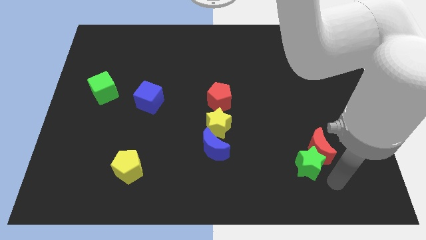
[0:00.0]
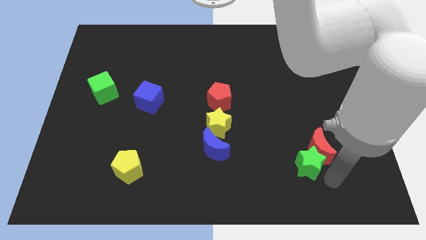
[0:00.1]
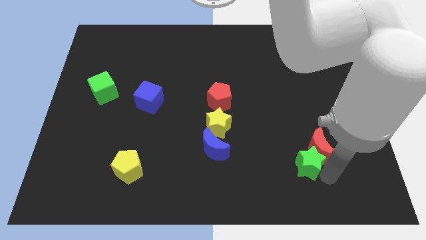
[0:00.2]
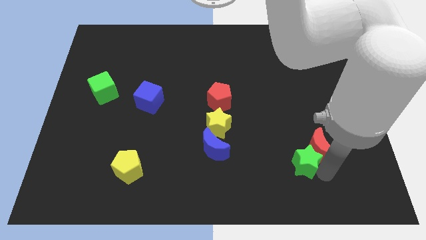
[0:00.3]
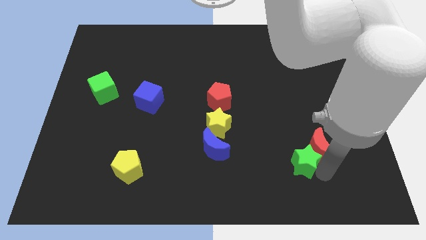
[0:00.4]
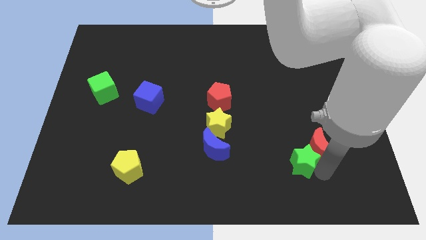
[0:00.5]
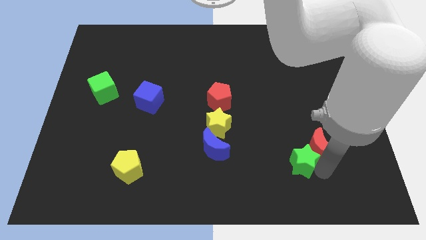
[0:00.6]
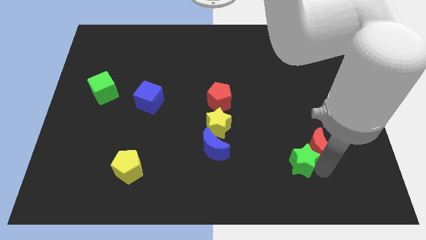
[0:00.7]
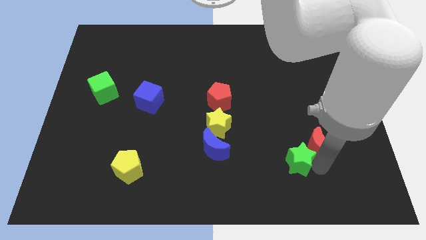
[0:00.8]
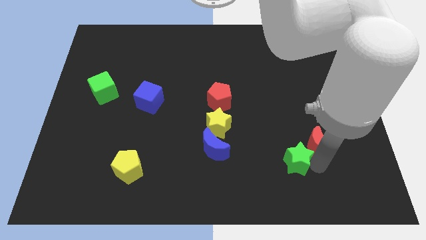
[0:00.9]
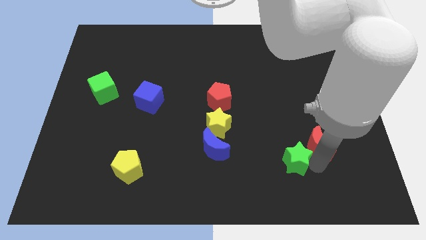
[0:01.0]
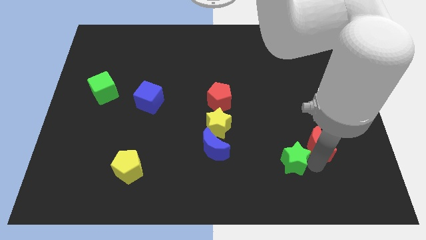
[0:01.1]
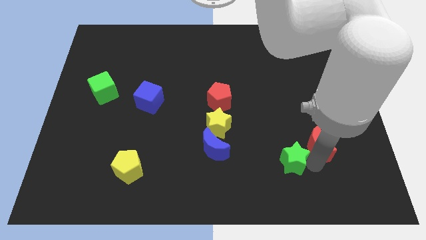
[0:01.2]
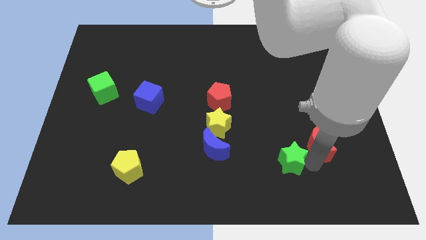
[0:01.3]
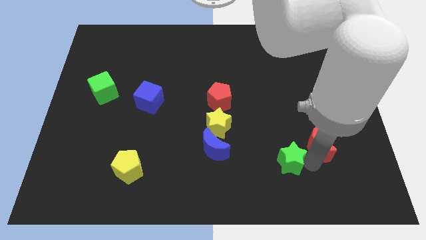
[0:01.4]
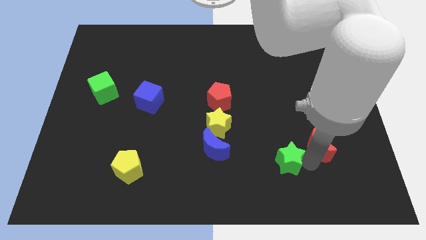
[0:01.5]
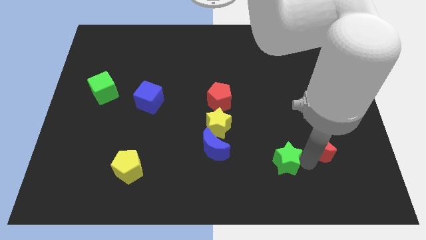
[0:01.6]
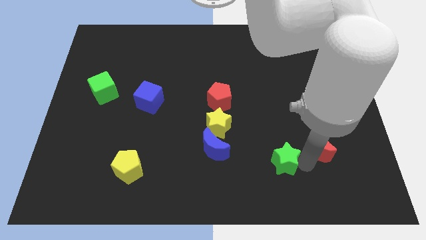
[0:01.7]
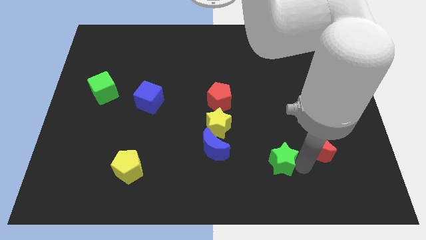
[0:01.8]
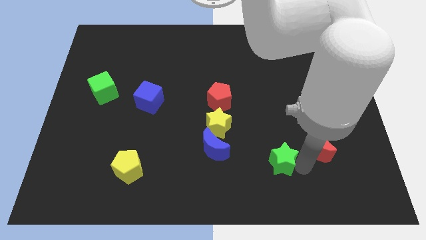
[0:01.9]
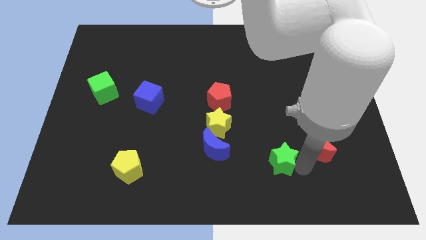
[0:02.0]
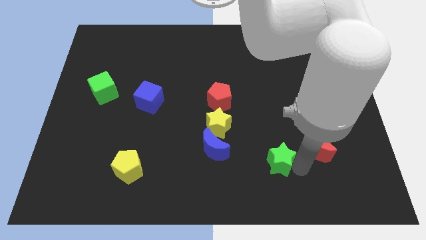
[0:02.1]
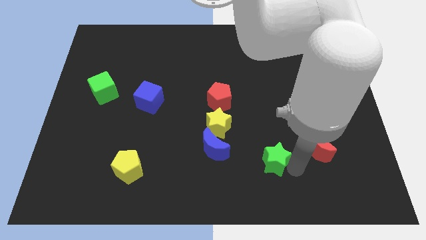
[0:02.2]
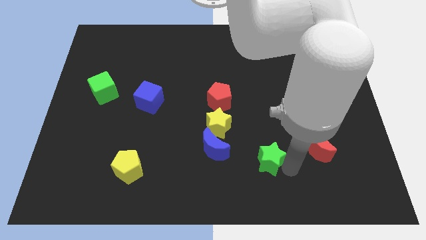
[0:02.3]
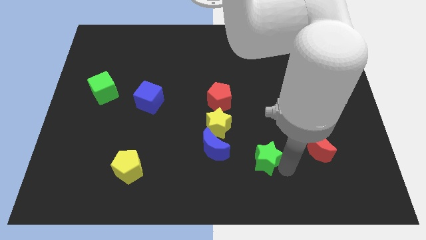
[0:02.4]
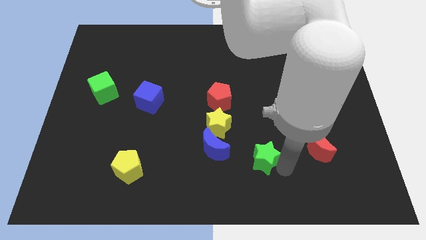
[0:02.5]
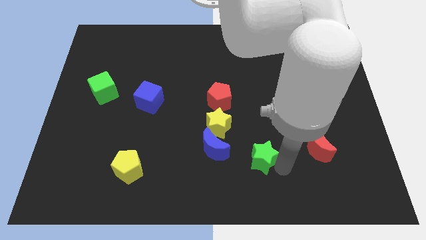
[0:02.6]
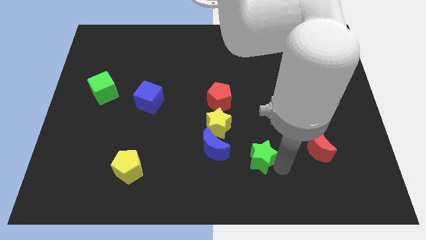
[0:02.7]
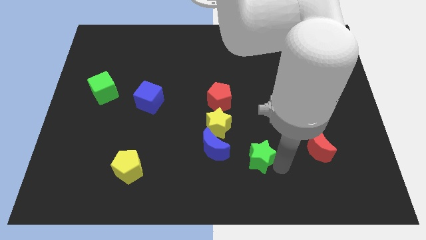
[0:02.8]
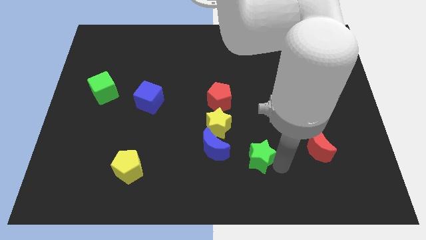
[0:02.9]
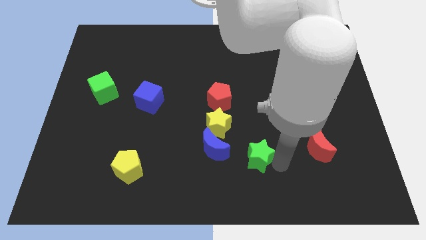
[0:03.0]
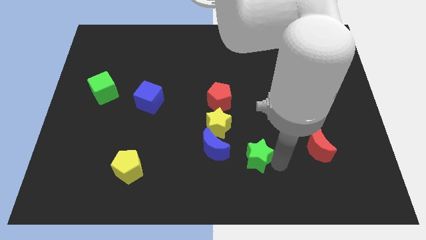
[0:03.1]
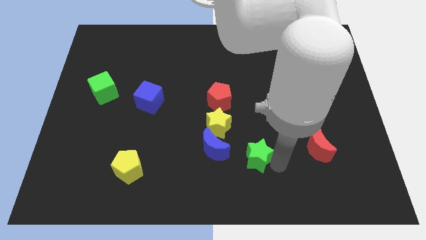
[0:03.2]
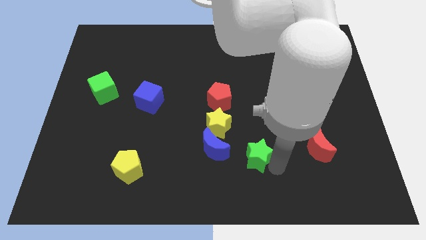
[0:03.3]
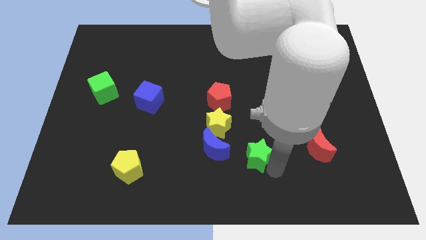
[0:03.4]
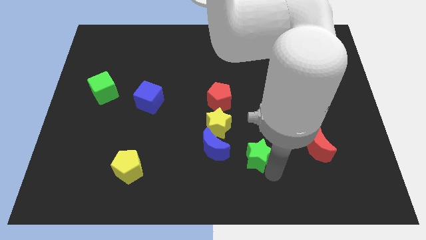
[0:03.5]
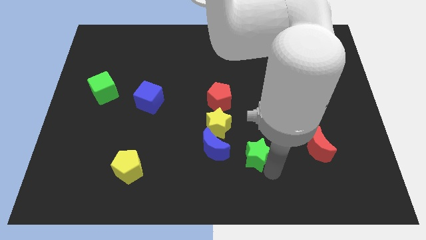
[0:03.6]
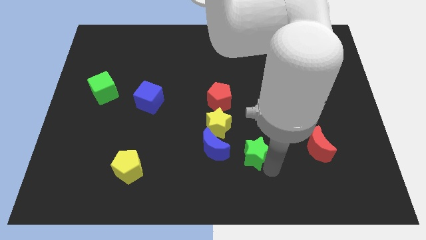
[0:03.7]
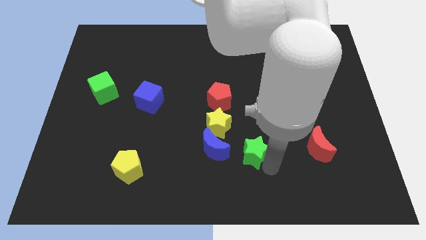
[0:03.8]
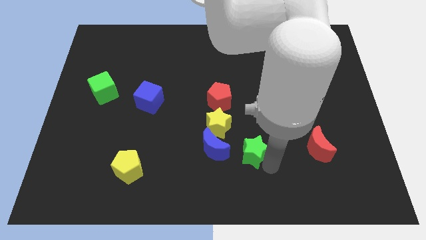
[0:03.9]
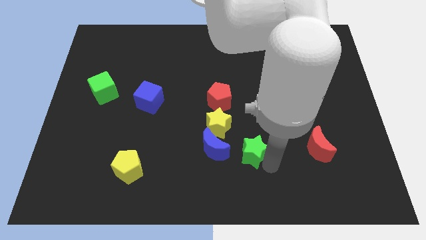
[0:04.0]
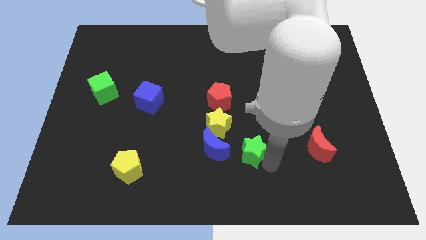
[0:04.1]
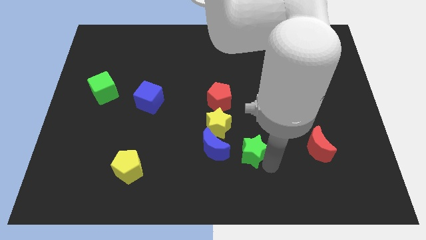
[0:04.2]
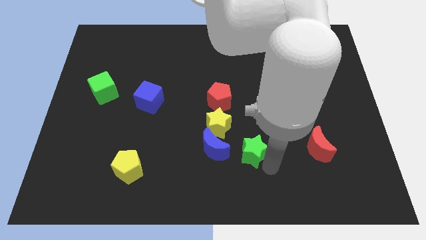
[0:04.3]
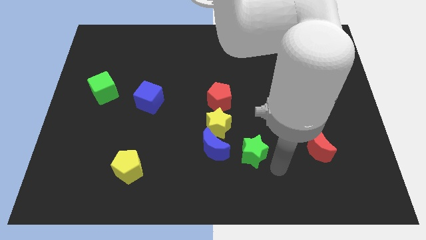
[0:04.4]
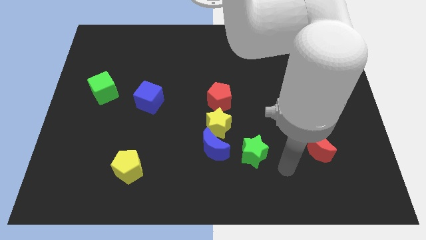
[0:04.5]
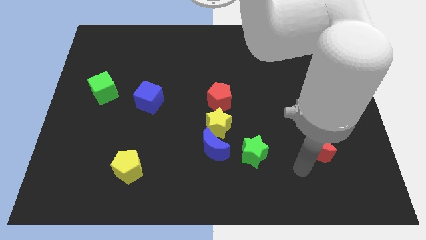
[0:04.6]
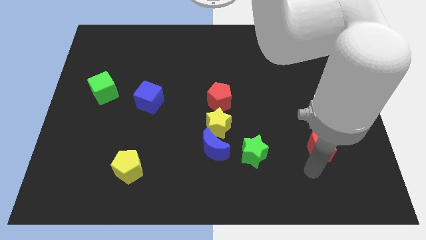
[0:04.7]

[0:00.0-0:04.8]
place the green star in between the red and blue crescents

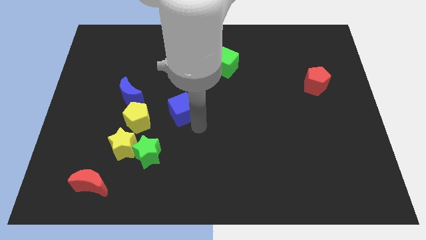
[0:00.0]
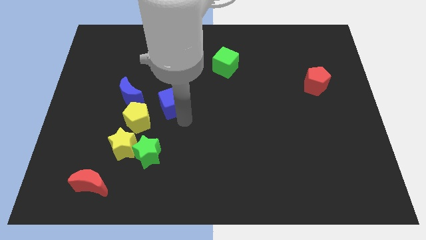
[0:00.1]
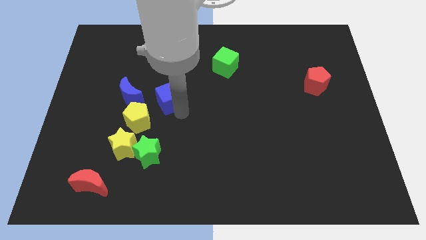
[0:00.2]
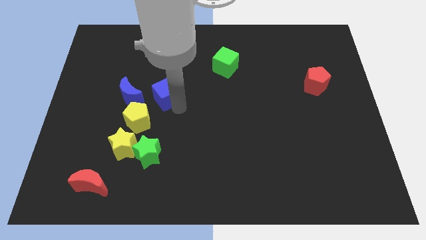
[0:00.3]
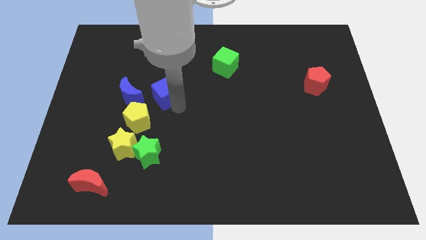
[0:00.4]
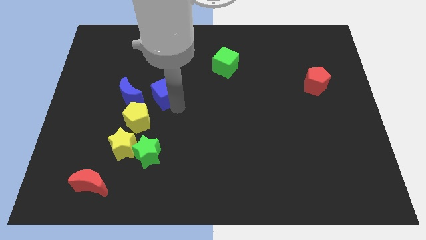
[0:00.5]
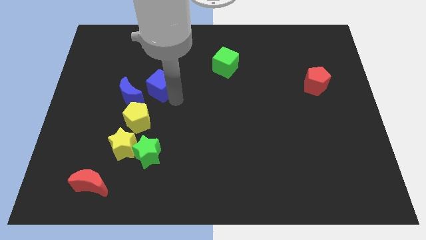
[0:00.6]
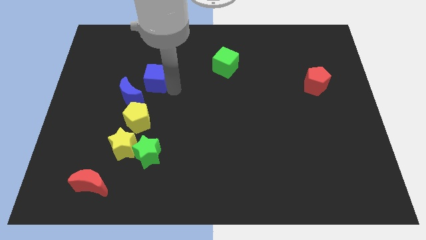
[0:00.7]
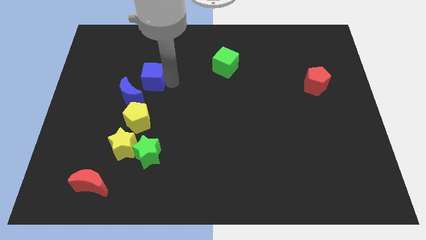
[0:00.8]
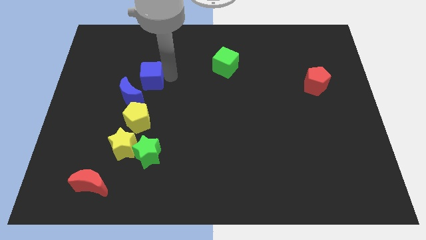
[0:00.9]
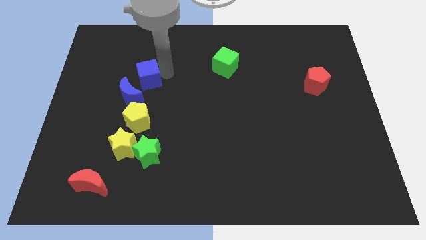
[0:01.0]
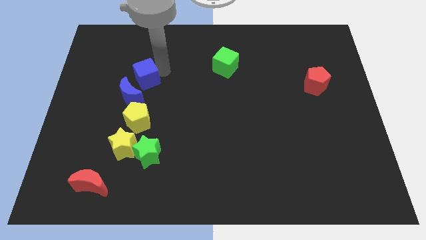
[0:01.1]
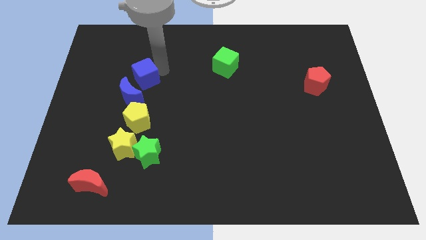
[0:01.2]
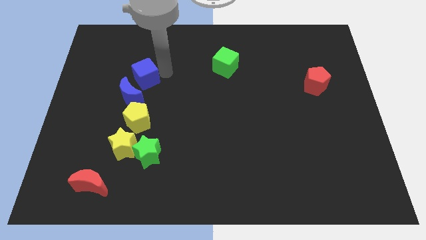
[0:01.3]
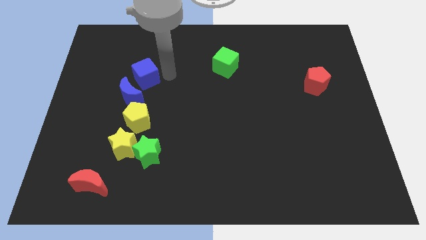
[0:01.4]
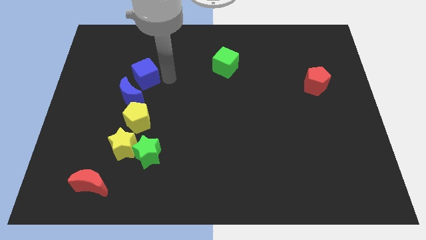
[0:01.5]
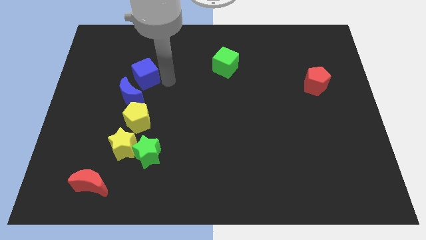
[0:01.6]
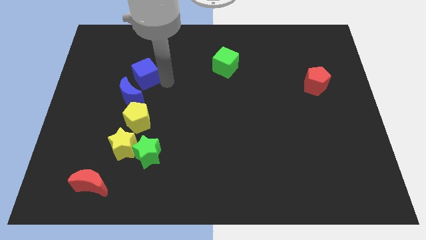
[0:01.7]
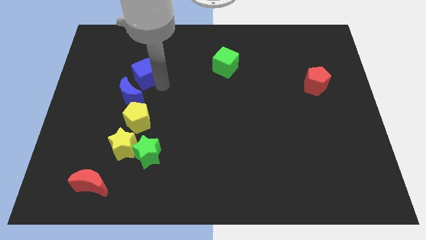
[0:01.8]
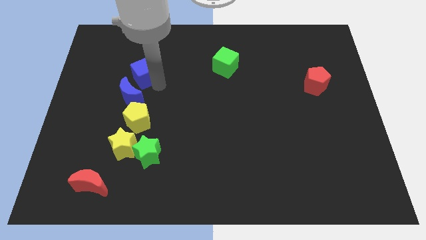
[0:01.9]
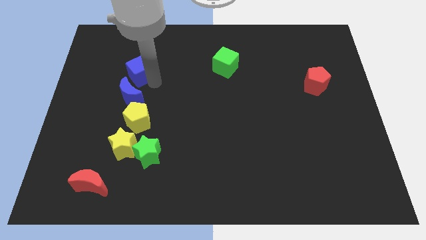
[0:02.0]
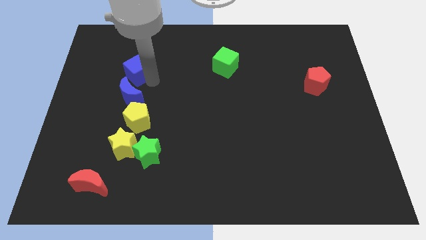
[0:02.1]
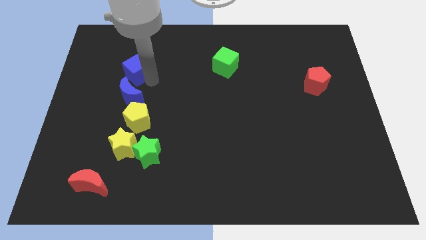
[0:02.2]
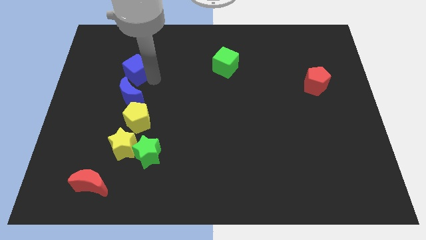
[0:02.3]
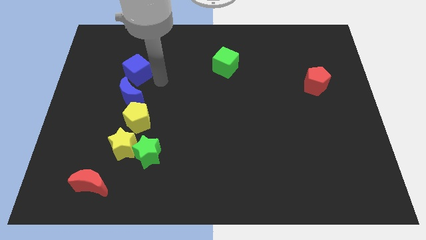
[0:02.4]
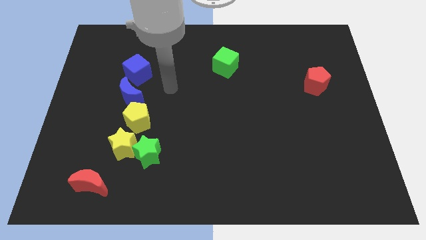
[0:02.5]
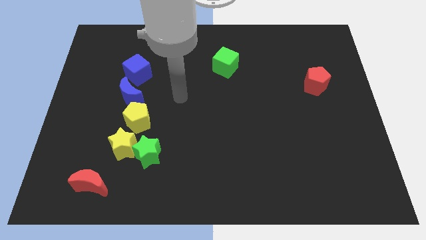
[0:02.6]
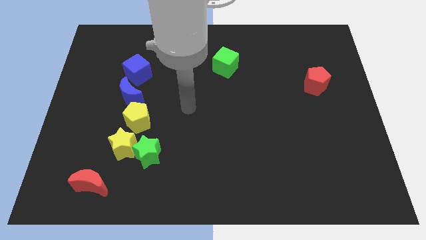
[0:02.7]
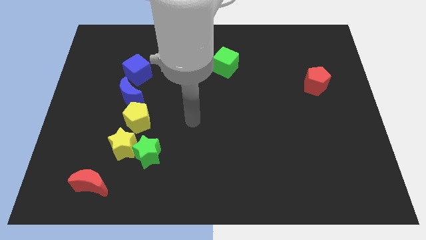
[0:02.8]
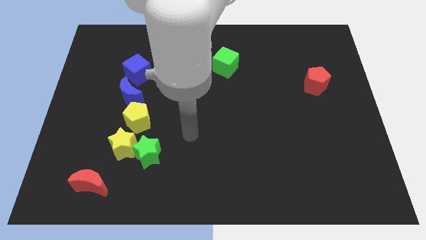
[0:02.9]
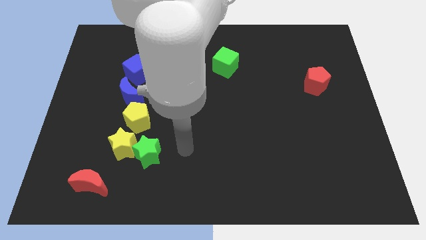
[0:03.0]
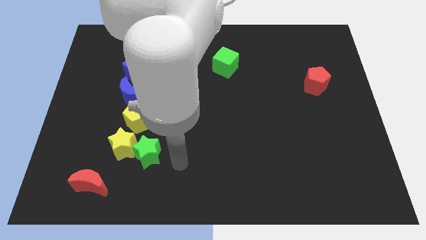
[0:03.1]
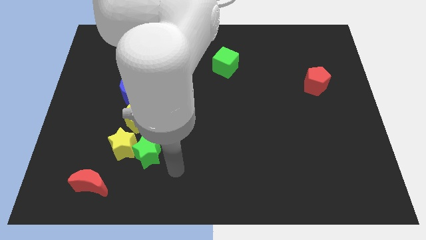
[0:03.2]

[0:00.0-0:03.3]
move the blue cube above the blue moon

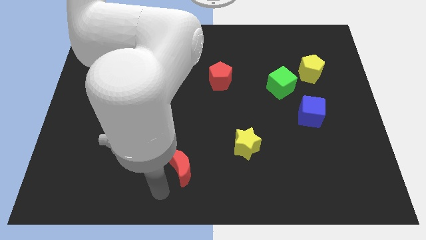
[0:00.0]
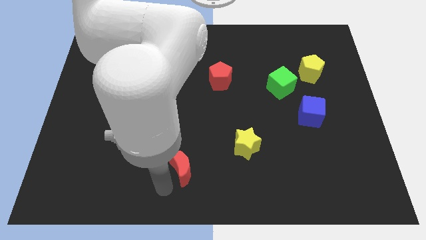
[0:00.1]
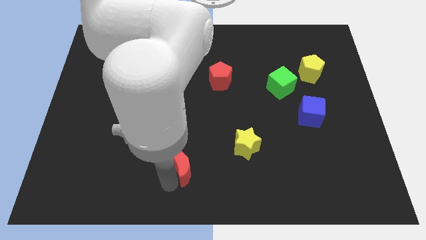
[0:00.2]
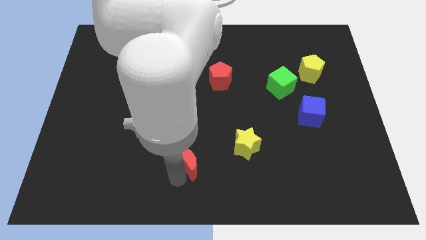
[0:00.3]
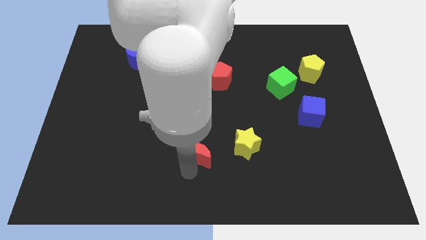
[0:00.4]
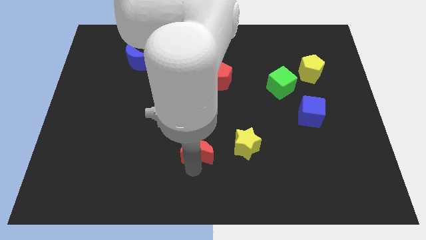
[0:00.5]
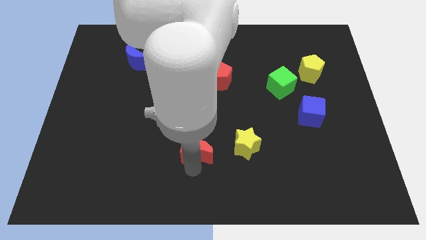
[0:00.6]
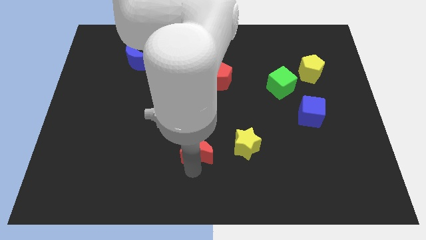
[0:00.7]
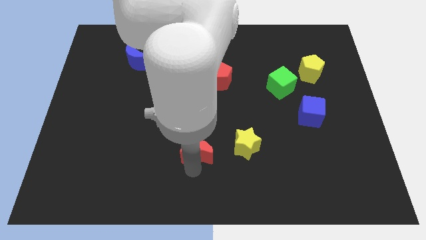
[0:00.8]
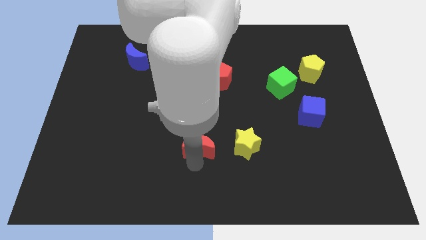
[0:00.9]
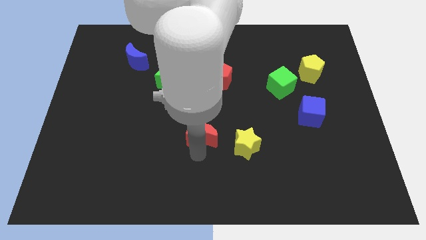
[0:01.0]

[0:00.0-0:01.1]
push the red crescent to the left of the yellow star
